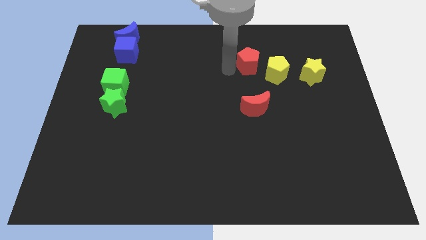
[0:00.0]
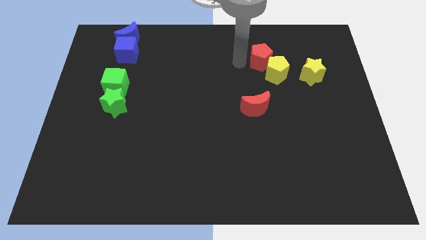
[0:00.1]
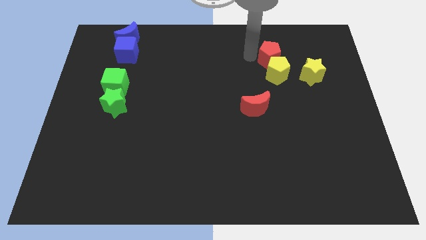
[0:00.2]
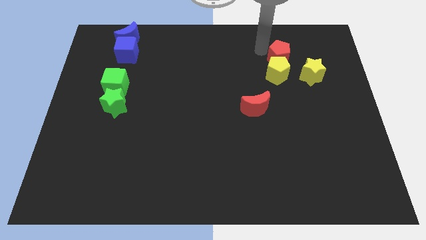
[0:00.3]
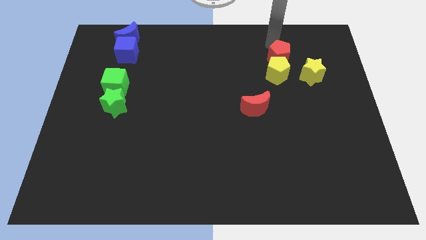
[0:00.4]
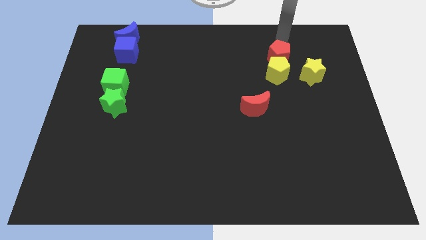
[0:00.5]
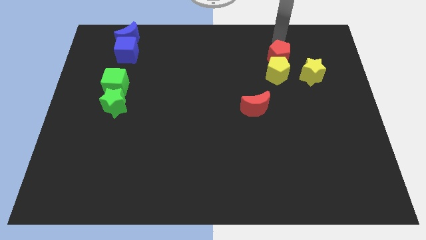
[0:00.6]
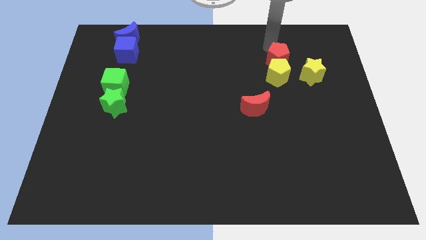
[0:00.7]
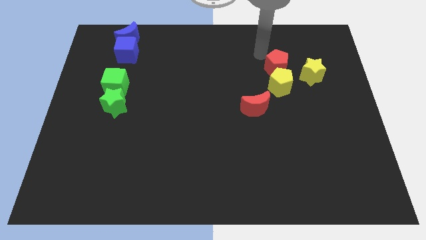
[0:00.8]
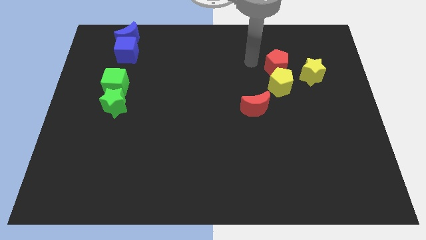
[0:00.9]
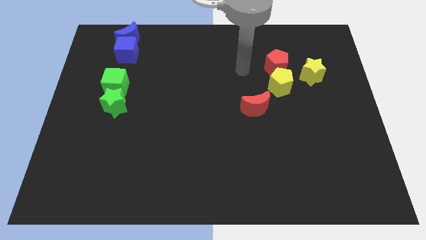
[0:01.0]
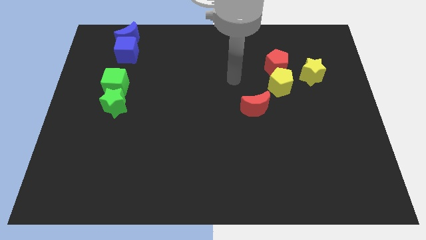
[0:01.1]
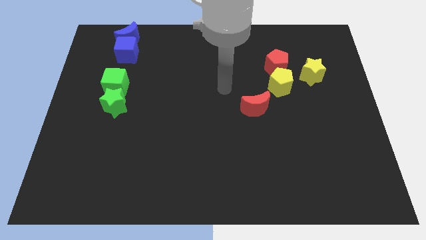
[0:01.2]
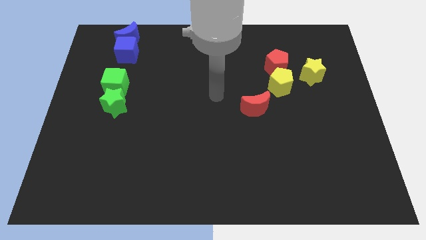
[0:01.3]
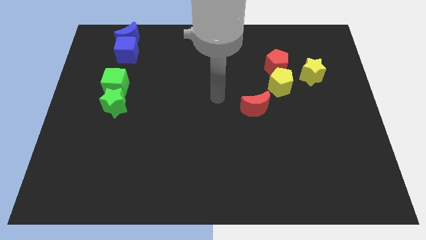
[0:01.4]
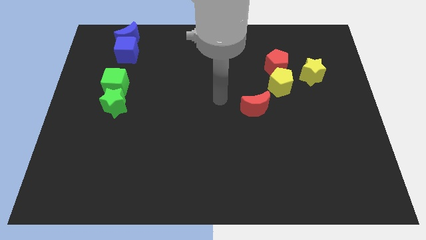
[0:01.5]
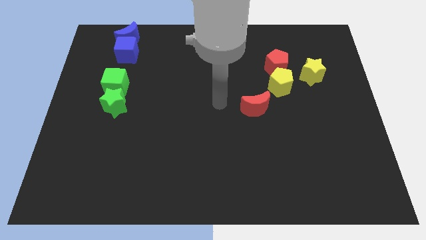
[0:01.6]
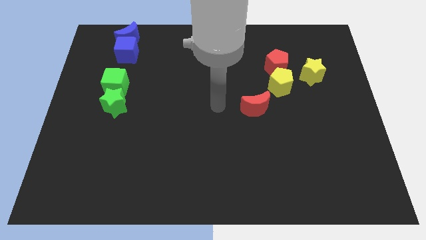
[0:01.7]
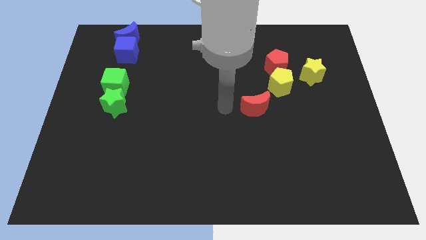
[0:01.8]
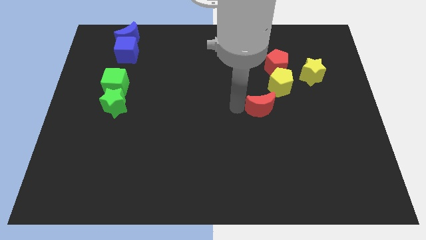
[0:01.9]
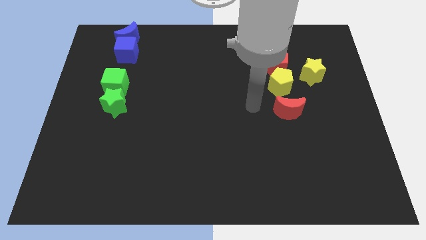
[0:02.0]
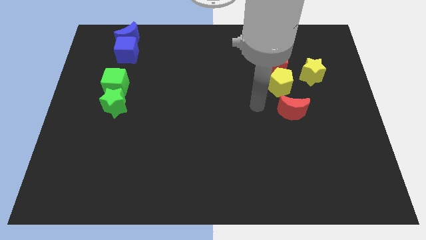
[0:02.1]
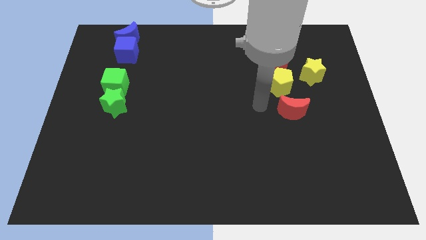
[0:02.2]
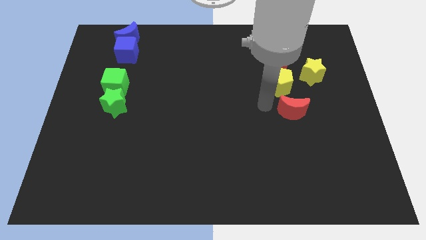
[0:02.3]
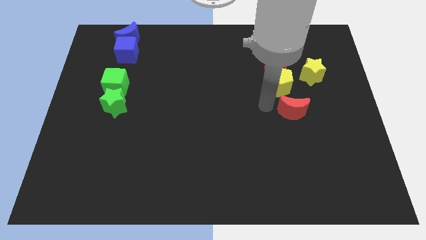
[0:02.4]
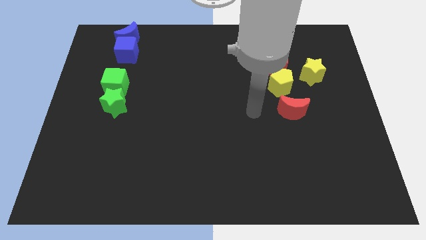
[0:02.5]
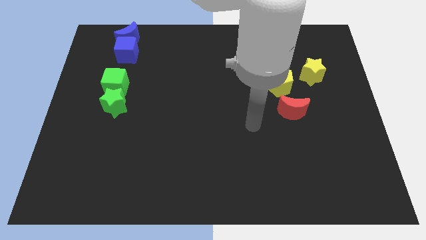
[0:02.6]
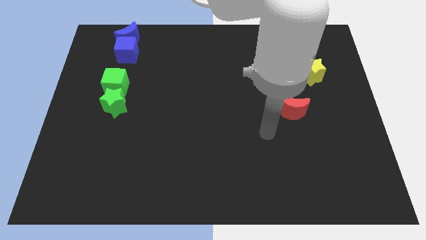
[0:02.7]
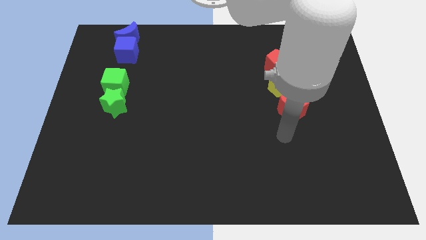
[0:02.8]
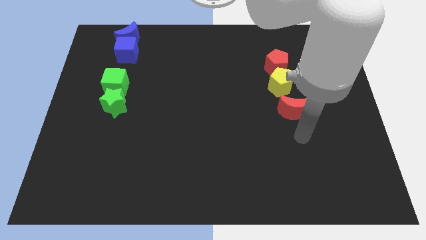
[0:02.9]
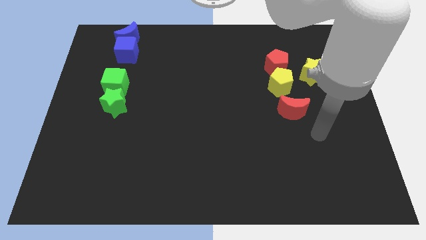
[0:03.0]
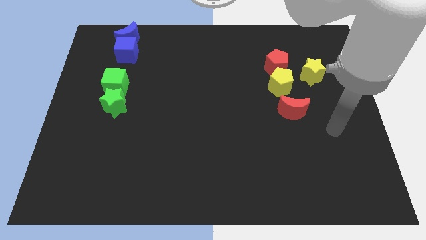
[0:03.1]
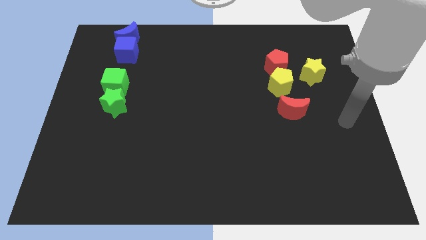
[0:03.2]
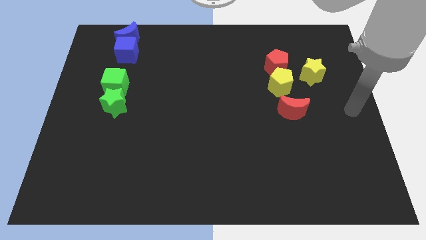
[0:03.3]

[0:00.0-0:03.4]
push the red pentagon and red crescent close to yellow pentagon

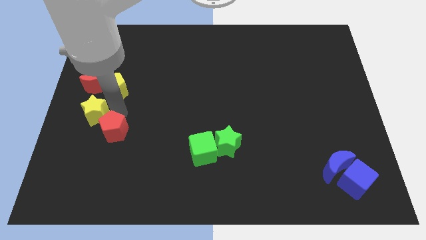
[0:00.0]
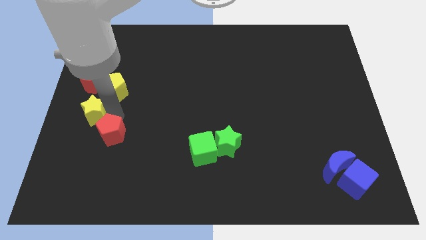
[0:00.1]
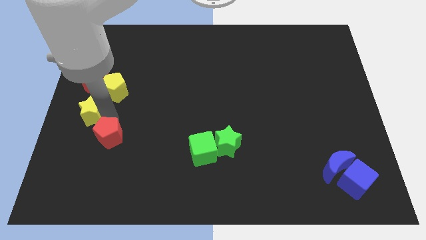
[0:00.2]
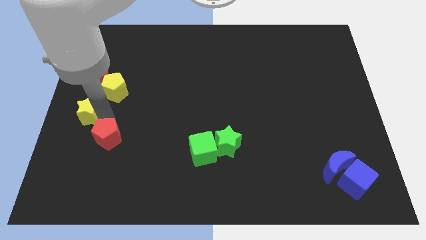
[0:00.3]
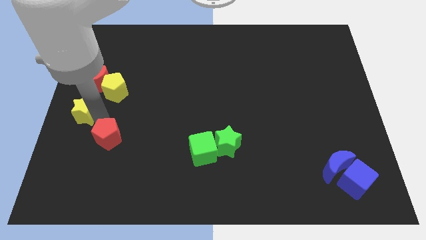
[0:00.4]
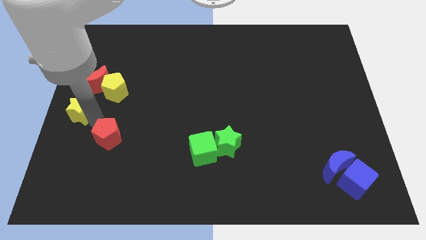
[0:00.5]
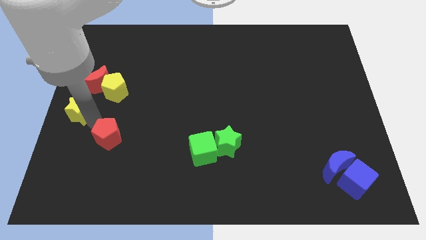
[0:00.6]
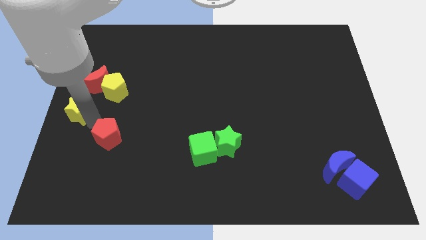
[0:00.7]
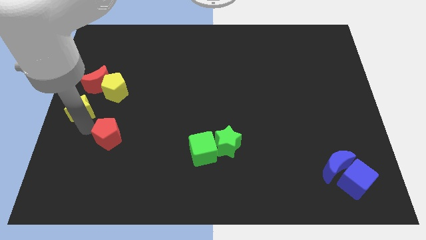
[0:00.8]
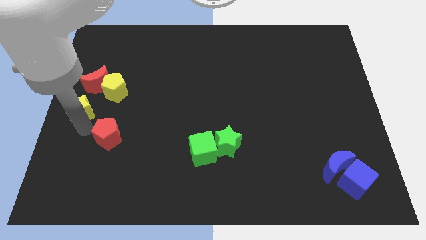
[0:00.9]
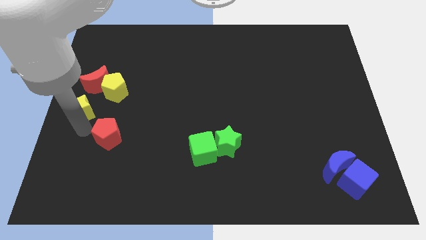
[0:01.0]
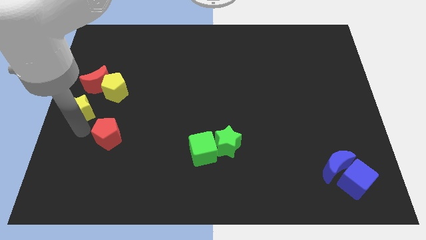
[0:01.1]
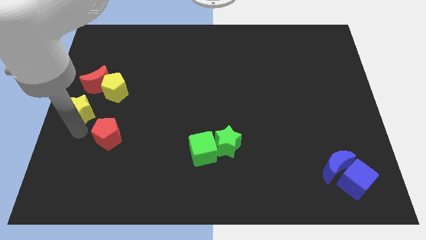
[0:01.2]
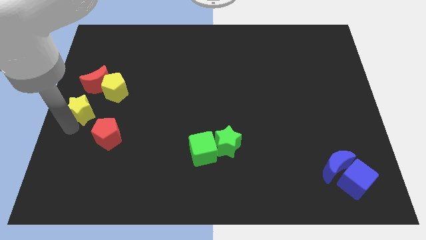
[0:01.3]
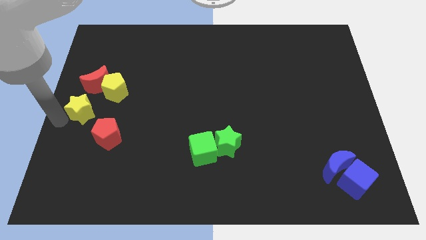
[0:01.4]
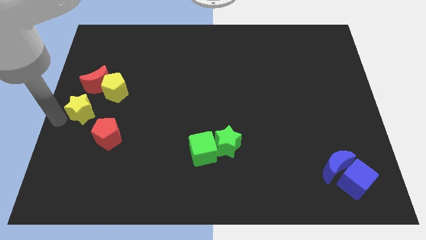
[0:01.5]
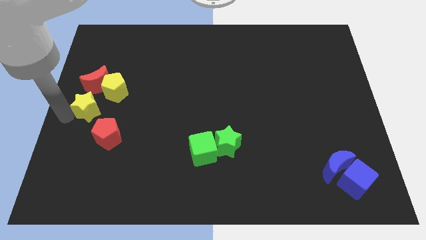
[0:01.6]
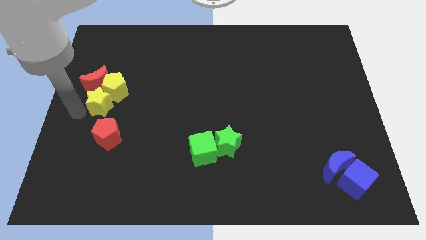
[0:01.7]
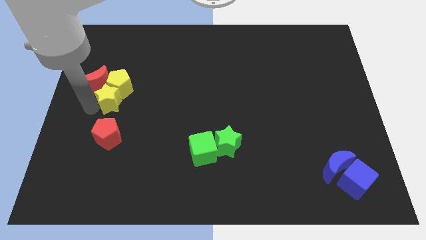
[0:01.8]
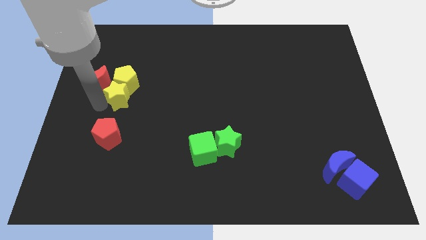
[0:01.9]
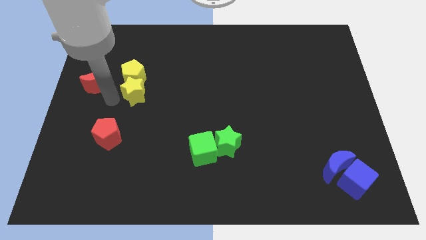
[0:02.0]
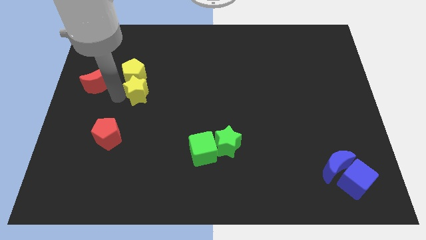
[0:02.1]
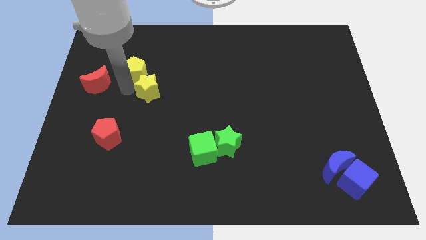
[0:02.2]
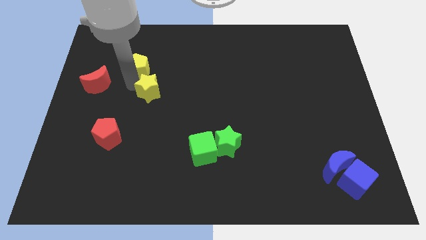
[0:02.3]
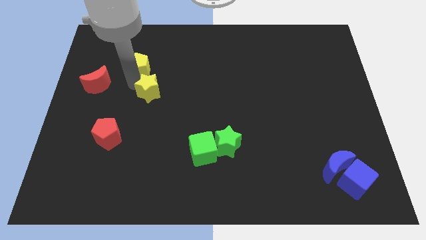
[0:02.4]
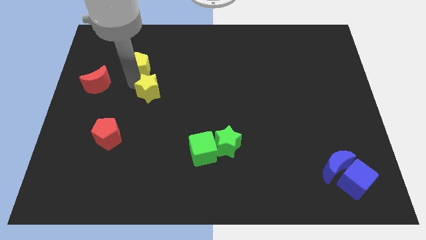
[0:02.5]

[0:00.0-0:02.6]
place yellow star below the yellow pentagon

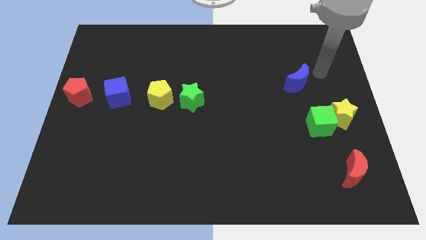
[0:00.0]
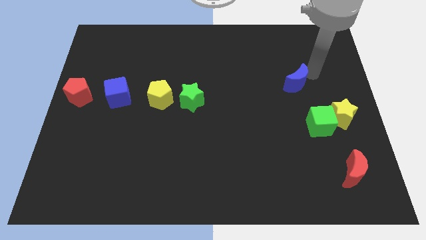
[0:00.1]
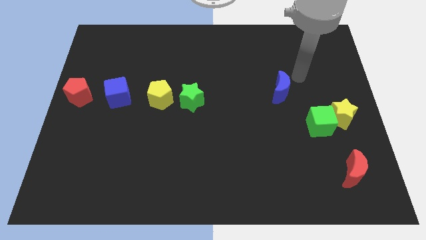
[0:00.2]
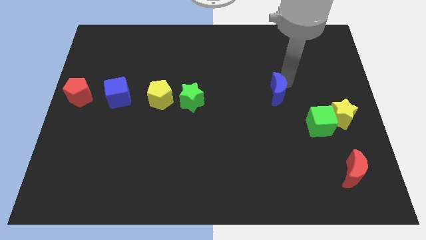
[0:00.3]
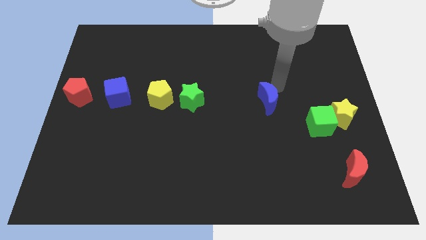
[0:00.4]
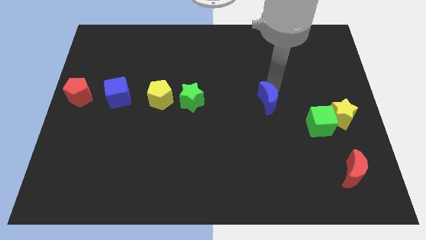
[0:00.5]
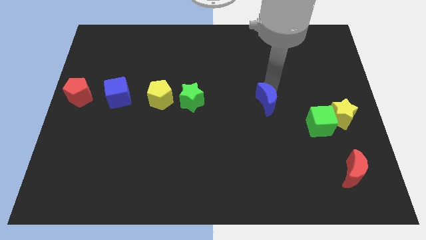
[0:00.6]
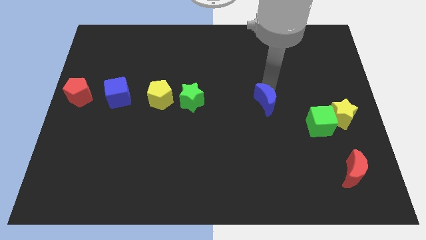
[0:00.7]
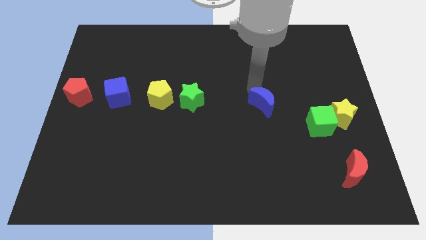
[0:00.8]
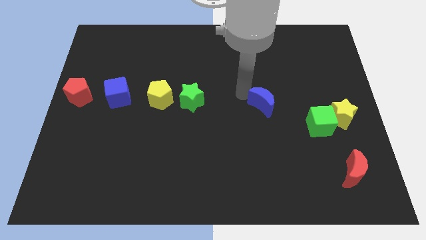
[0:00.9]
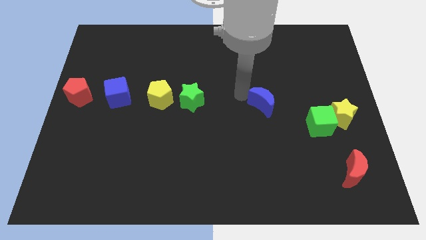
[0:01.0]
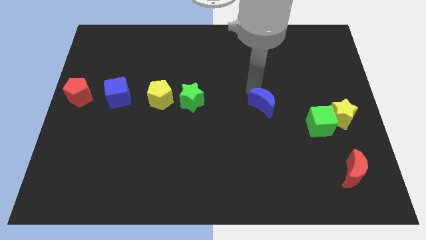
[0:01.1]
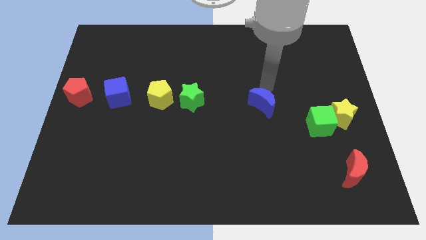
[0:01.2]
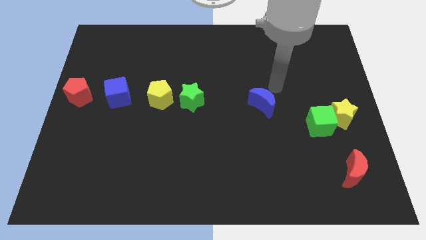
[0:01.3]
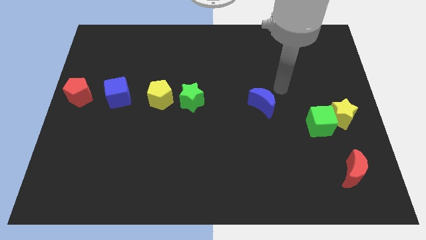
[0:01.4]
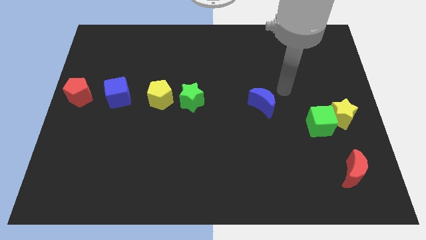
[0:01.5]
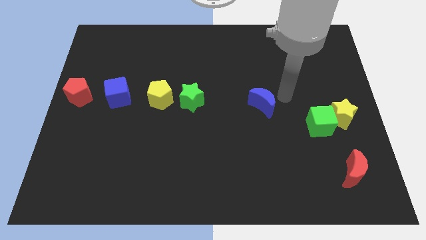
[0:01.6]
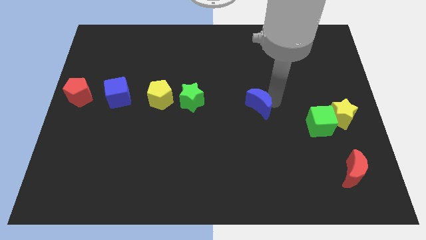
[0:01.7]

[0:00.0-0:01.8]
slide the blue moon diagonal to the red moon

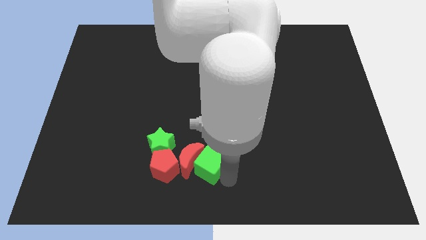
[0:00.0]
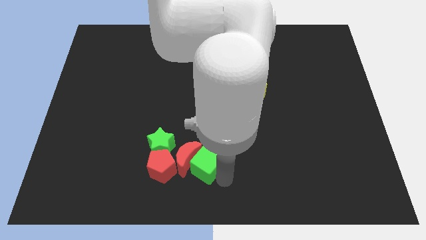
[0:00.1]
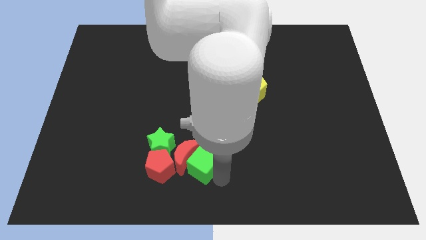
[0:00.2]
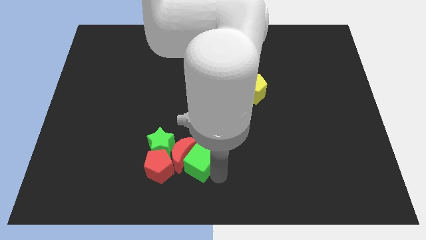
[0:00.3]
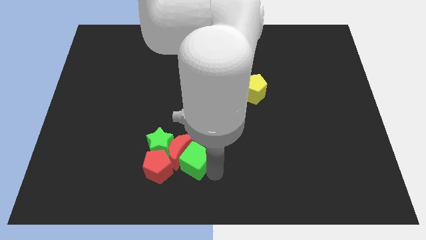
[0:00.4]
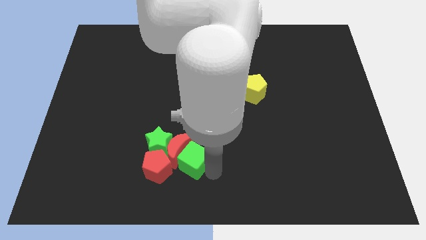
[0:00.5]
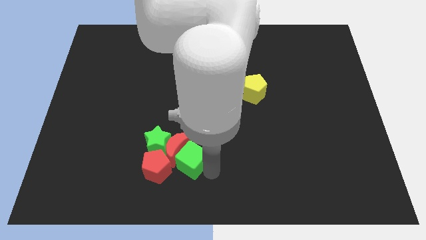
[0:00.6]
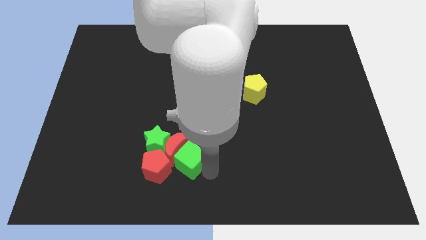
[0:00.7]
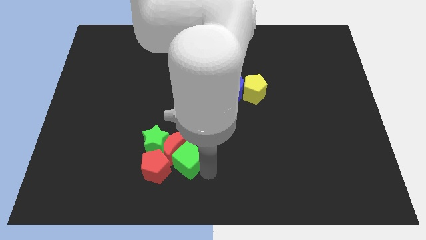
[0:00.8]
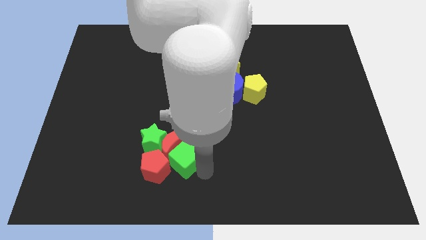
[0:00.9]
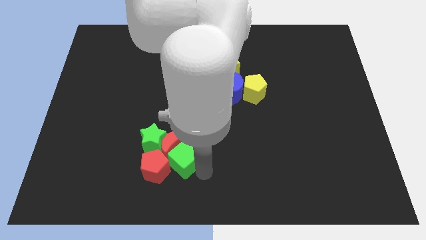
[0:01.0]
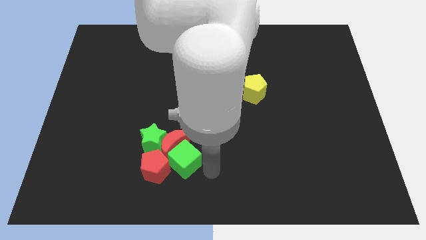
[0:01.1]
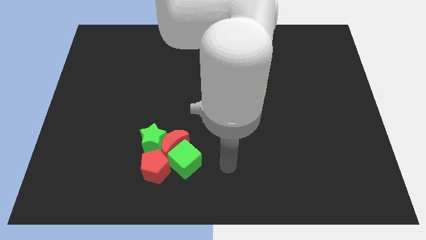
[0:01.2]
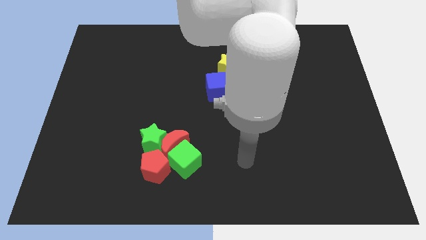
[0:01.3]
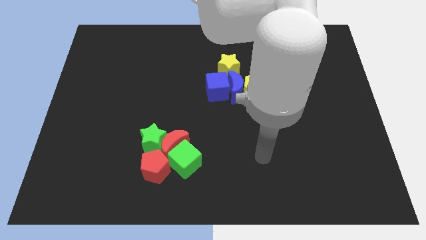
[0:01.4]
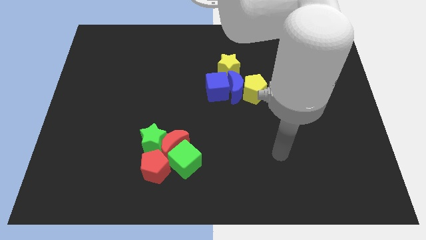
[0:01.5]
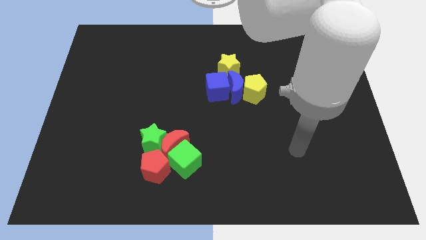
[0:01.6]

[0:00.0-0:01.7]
push the green cube left to the red pentagon
